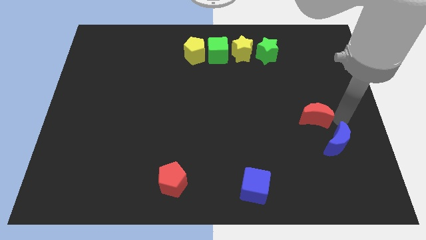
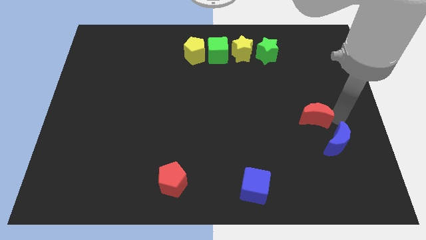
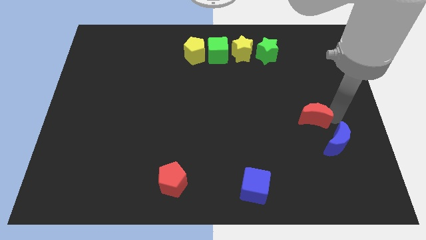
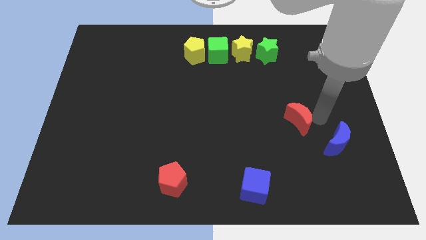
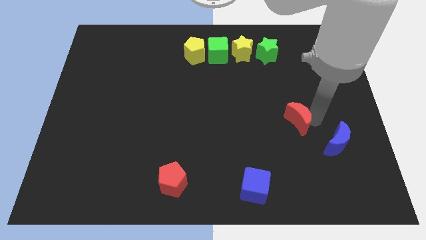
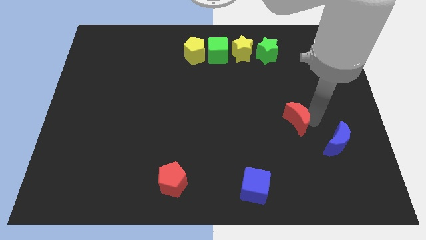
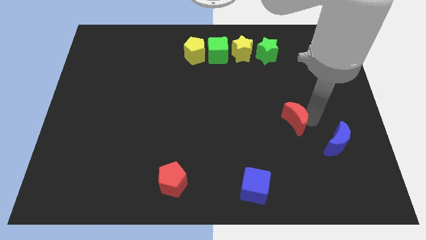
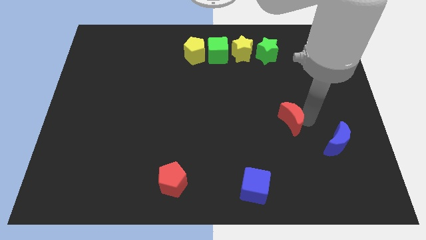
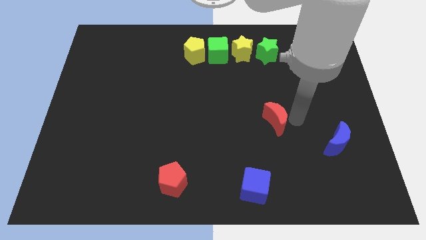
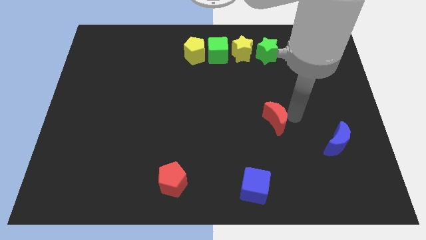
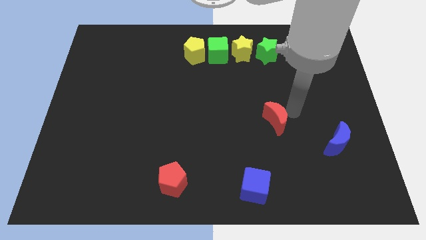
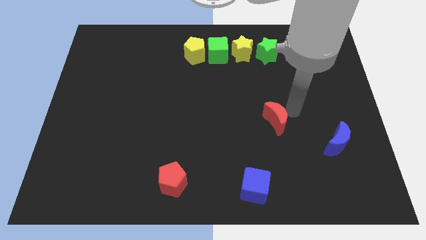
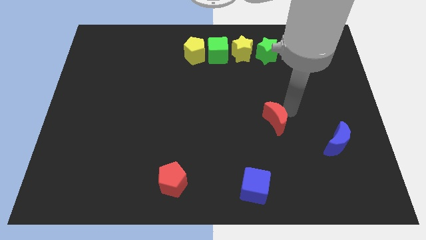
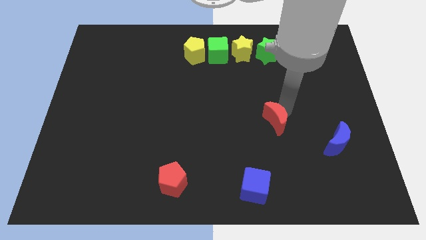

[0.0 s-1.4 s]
move the red moon slightly to the left side of the board

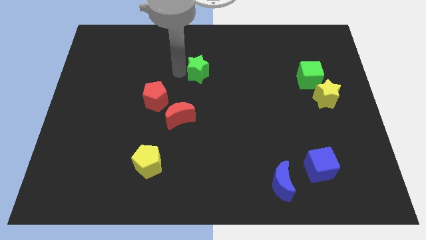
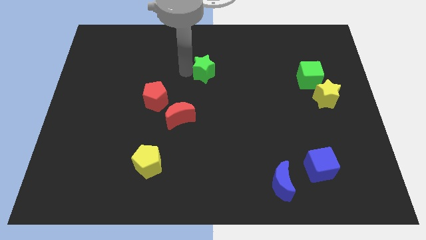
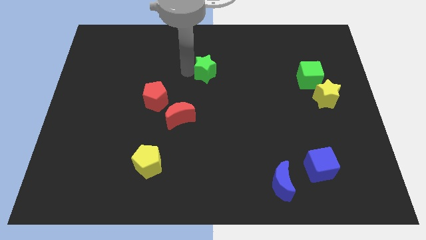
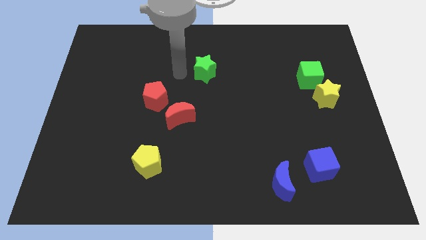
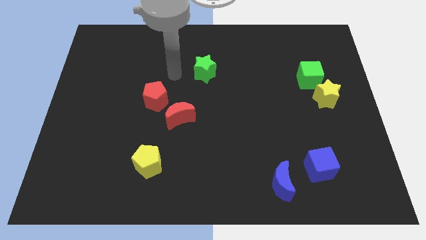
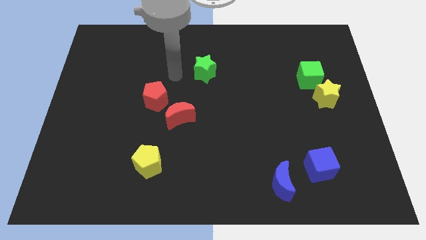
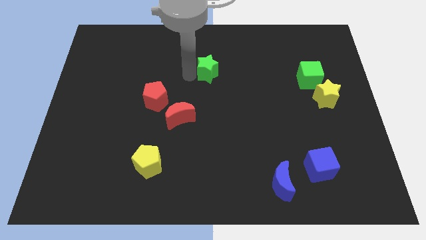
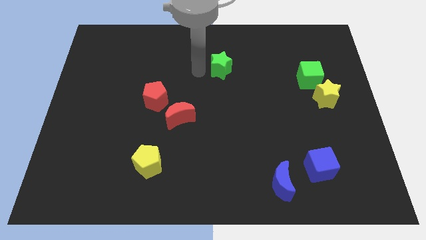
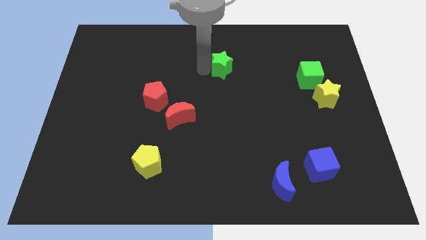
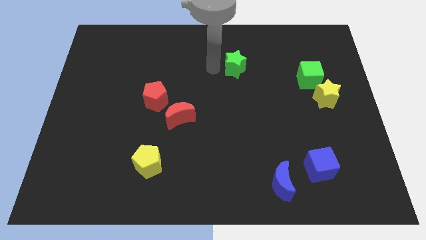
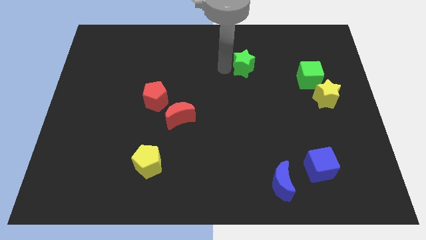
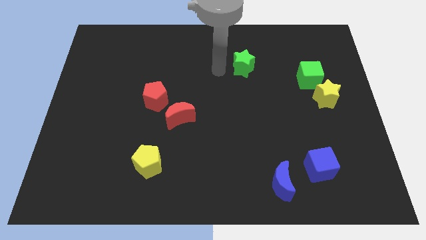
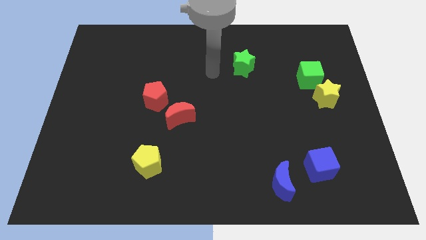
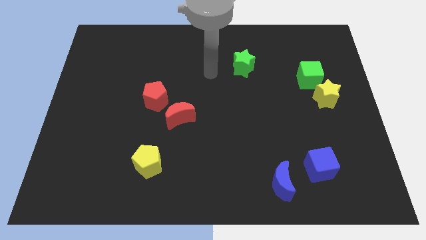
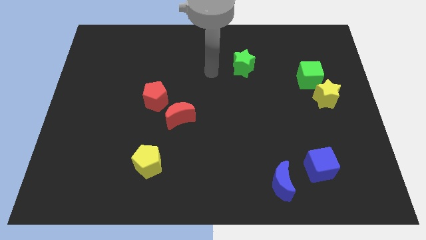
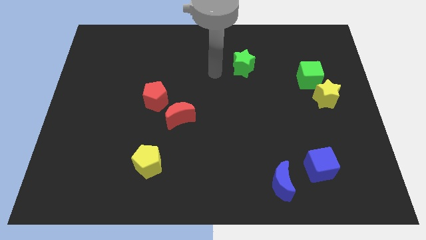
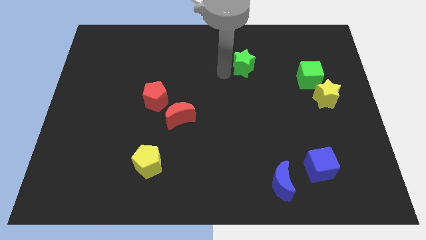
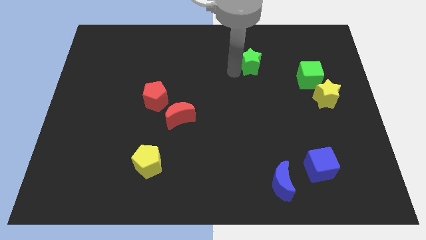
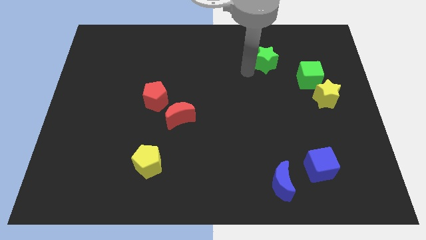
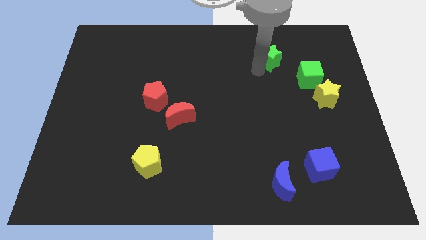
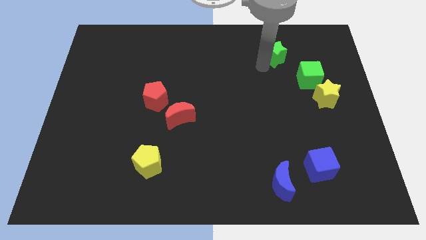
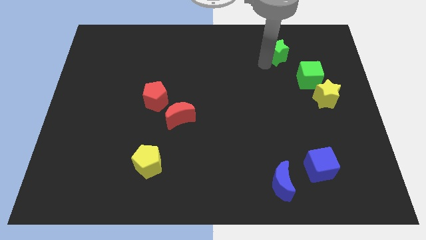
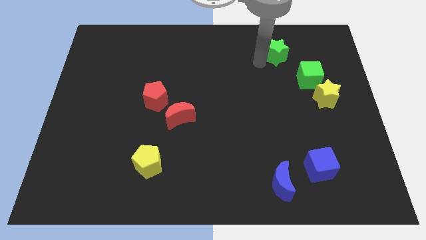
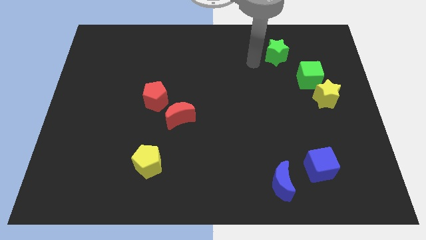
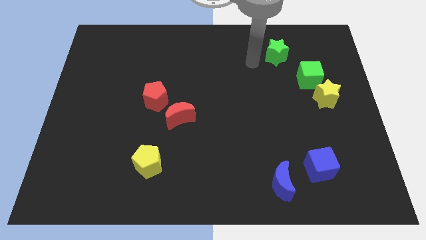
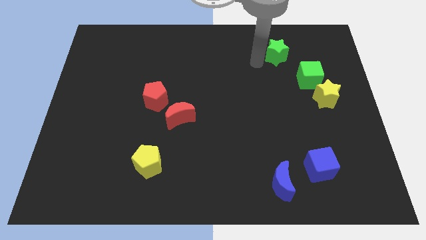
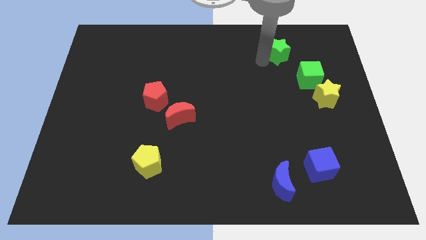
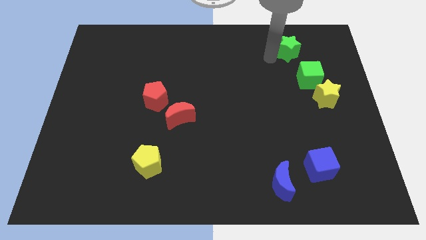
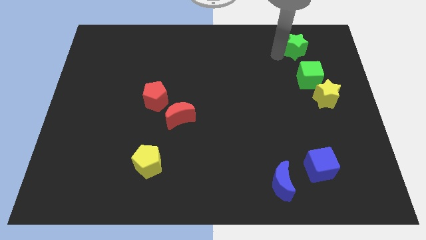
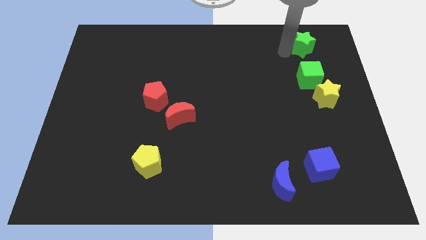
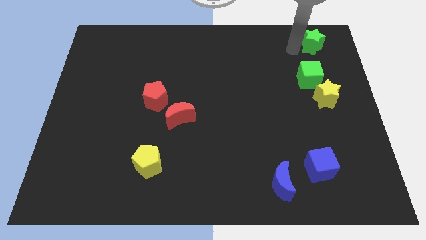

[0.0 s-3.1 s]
place the green star above the green cube

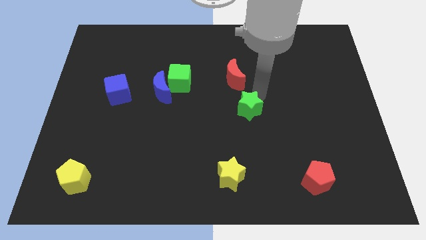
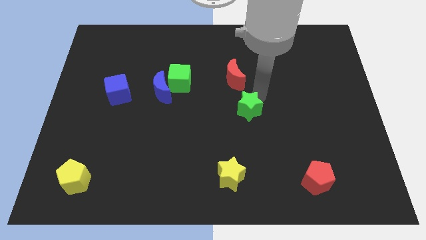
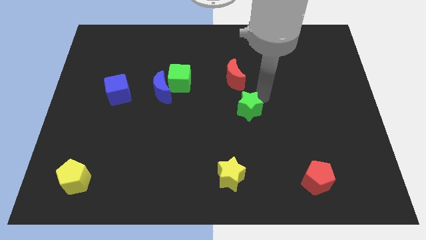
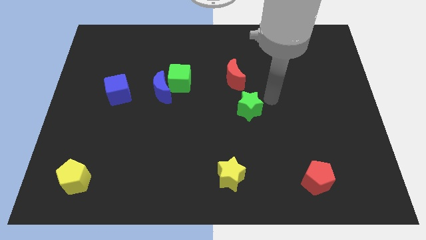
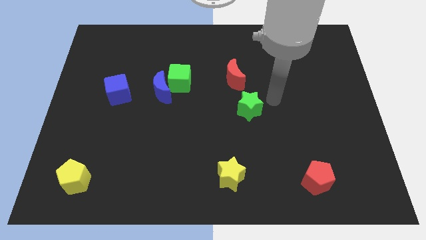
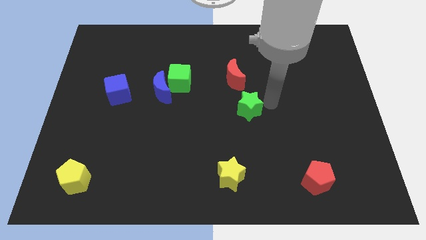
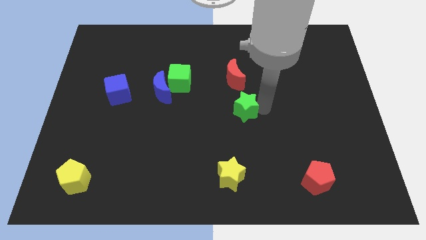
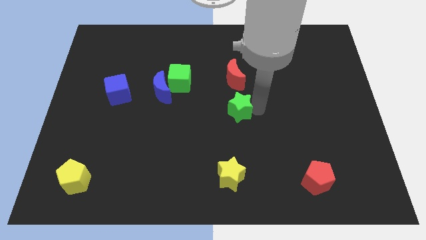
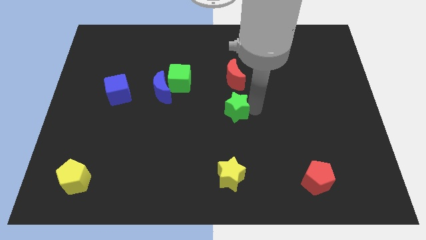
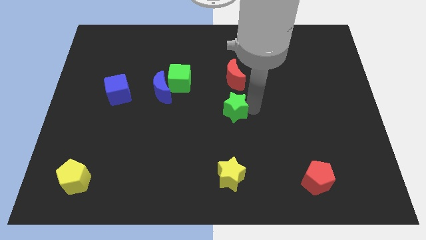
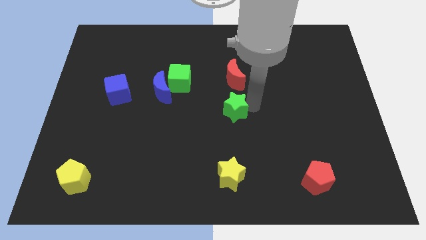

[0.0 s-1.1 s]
move green star below the red moon

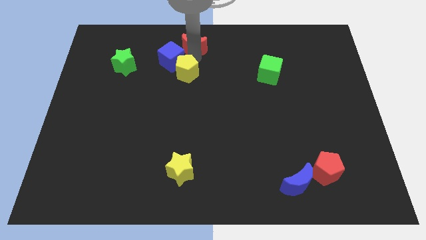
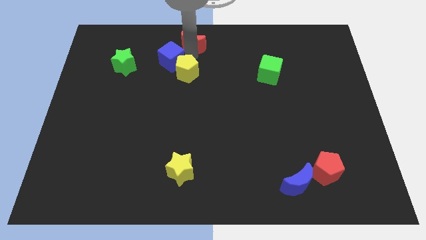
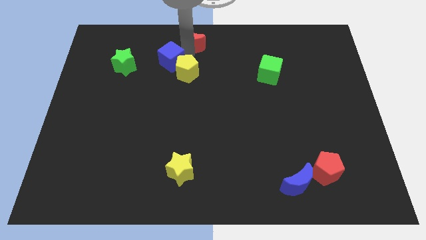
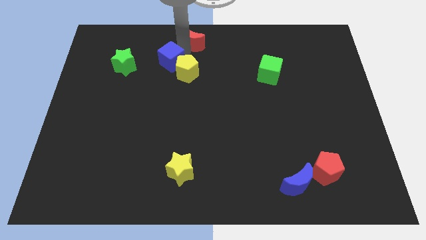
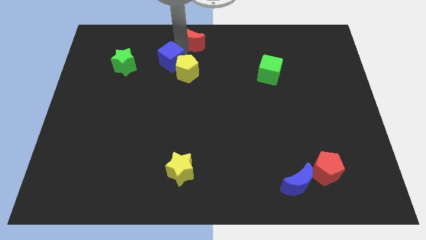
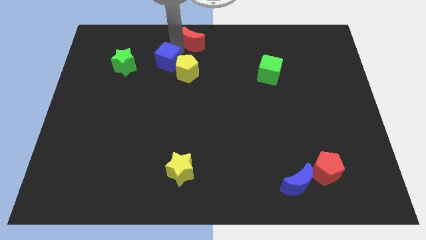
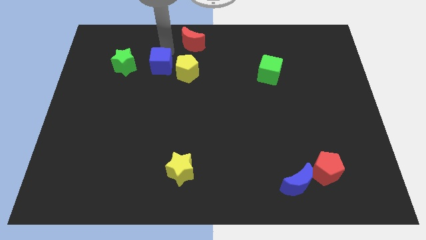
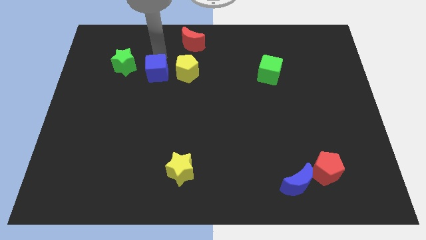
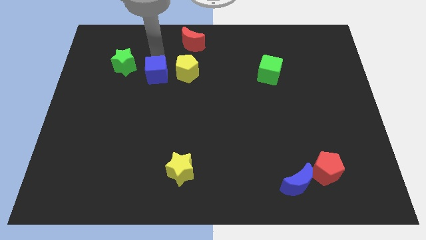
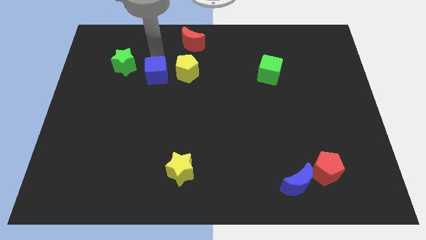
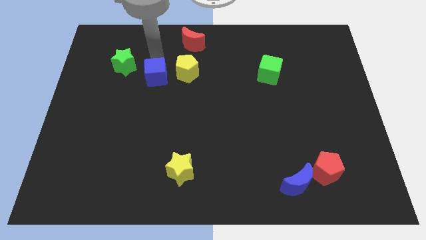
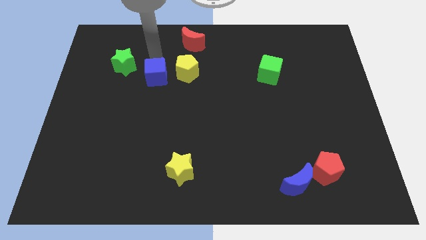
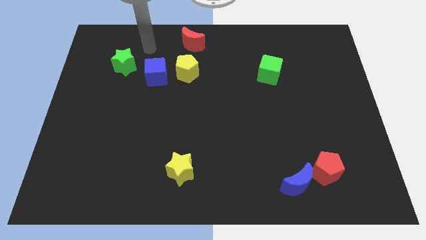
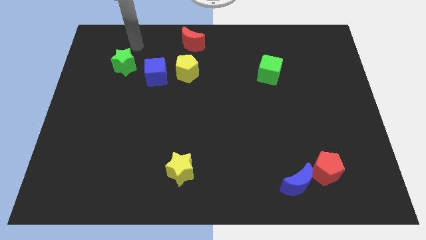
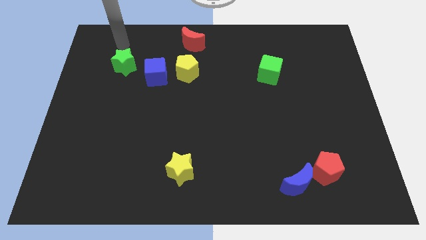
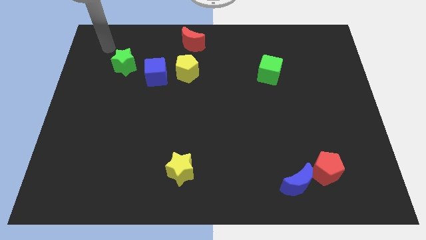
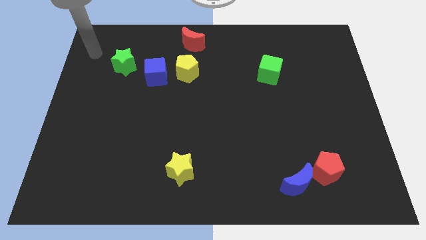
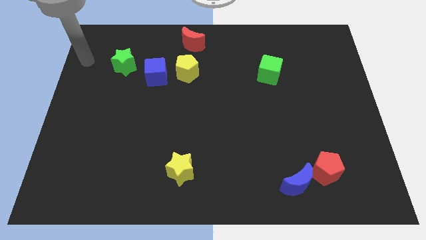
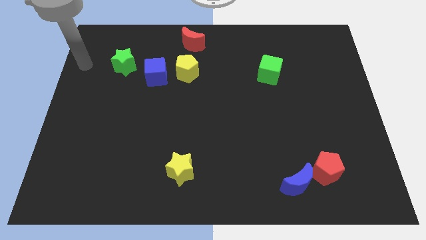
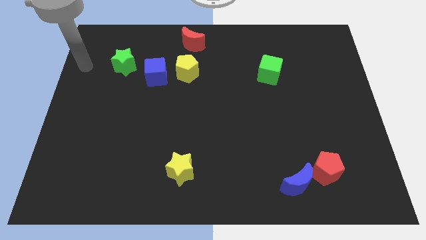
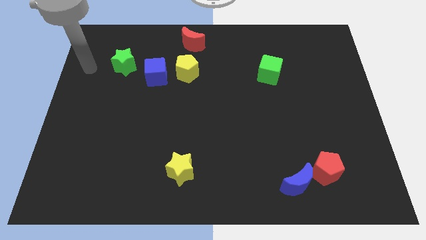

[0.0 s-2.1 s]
move the blue cube towards bottom

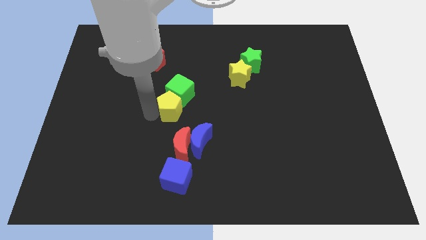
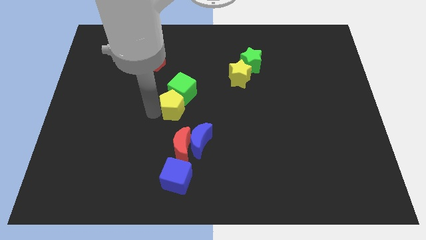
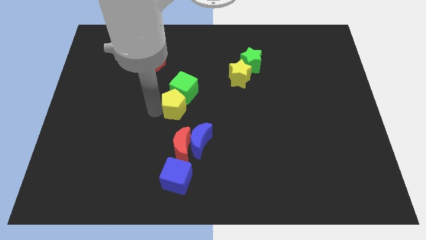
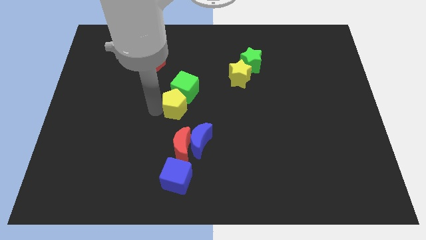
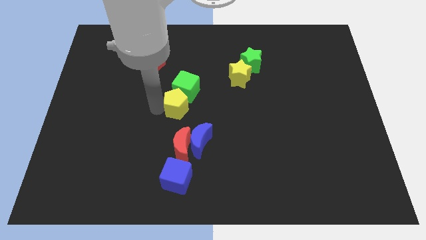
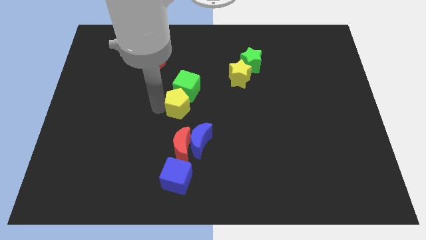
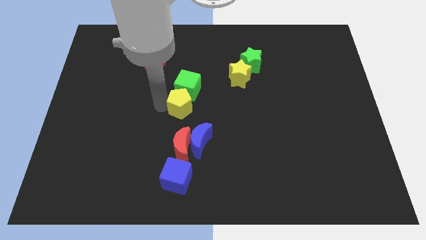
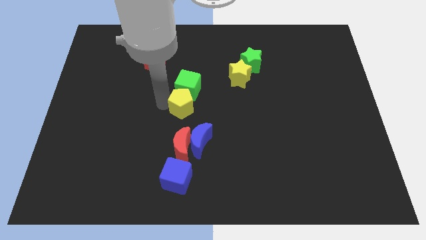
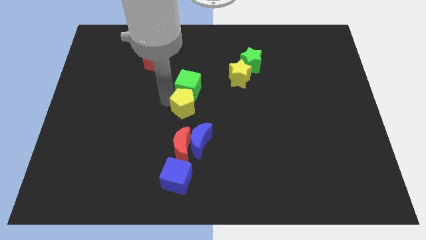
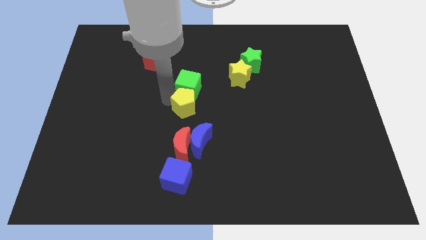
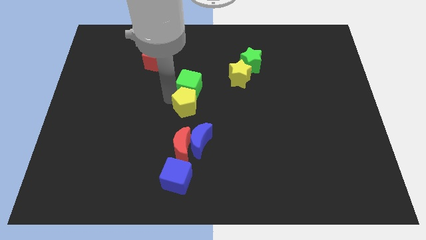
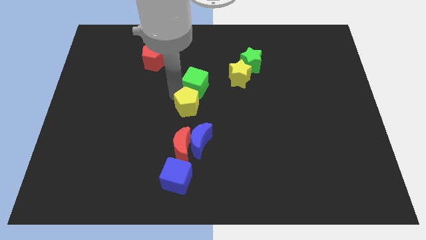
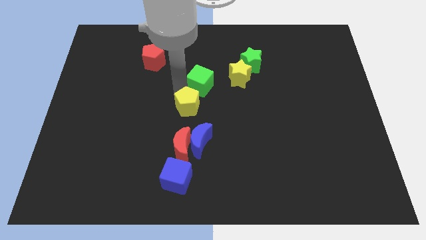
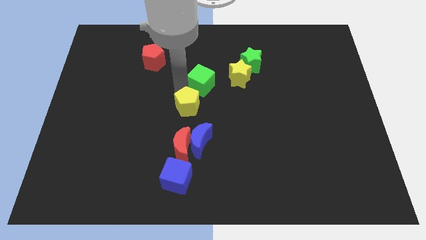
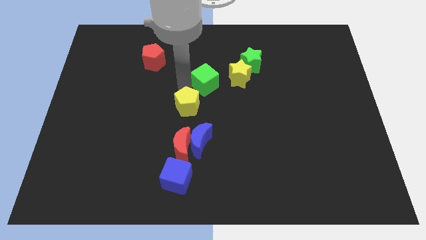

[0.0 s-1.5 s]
place the yellow pentagon on top of the red moon
